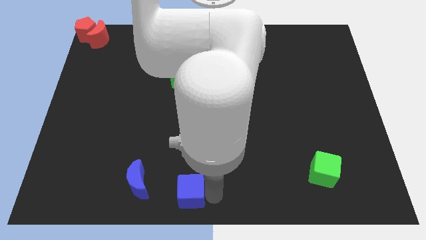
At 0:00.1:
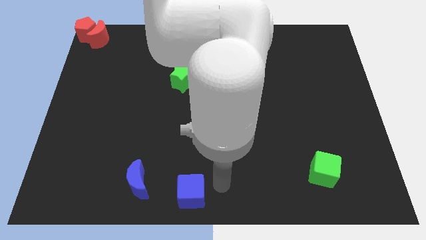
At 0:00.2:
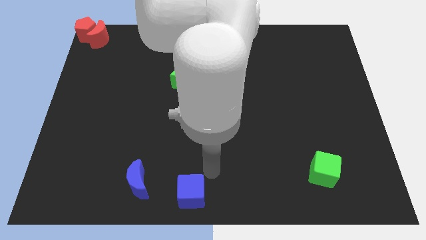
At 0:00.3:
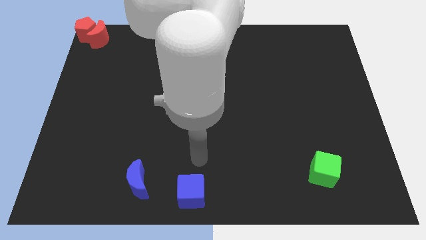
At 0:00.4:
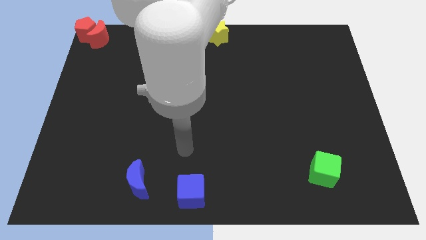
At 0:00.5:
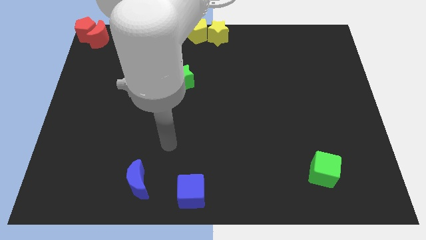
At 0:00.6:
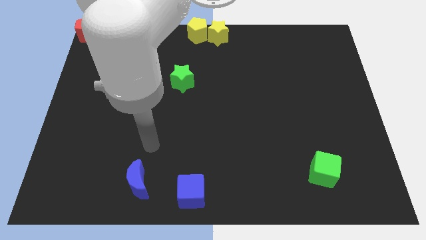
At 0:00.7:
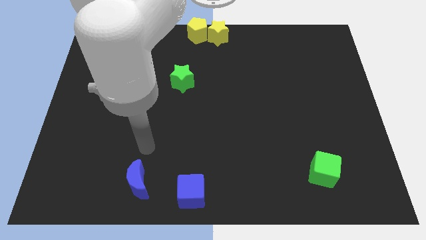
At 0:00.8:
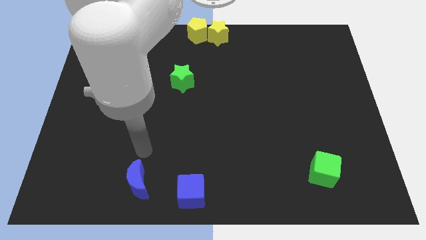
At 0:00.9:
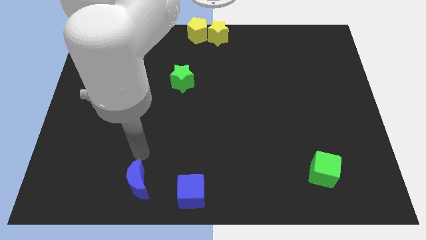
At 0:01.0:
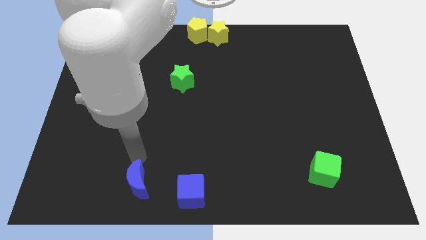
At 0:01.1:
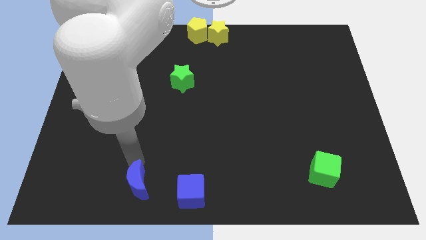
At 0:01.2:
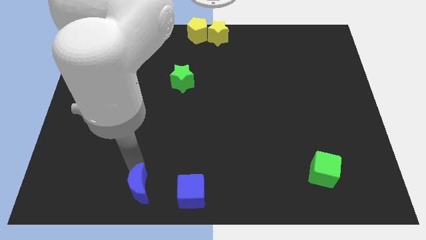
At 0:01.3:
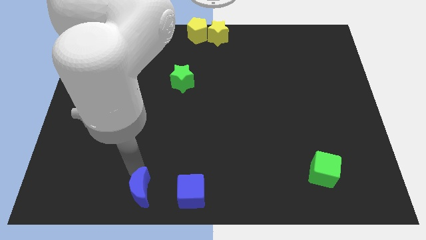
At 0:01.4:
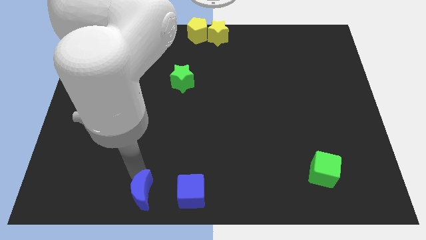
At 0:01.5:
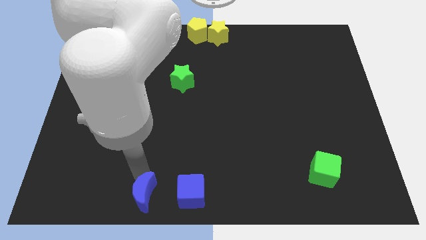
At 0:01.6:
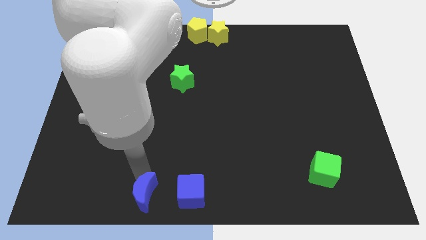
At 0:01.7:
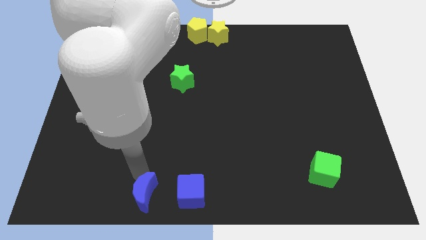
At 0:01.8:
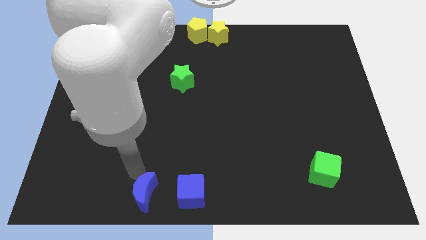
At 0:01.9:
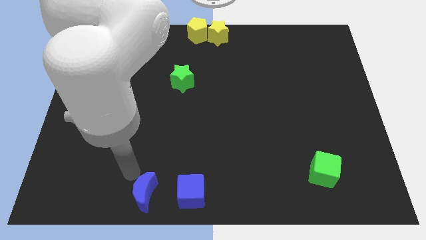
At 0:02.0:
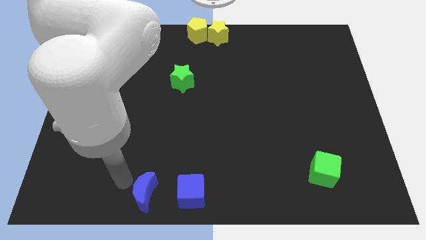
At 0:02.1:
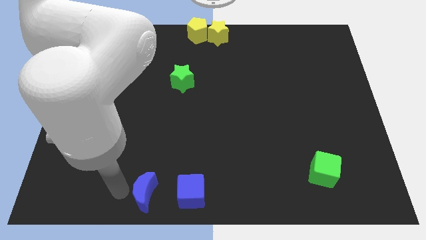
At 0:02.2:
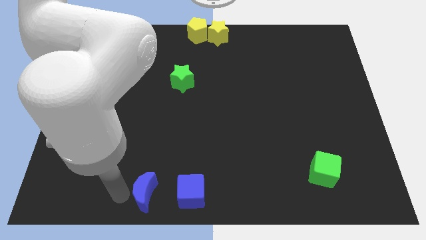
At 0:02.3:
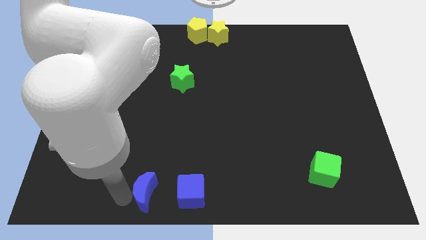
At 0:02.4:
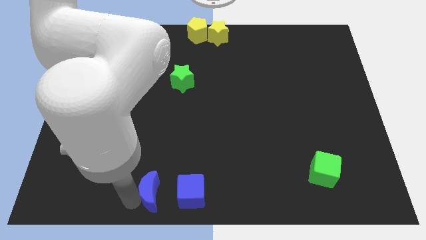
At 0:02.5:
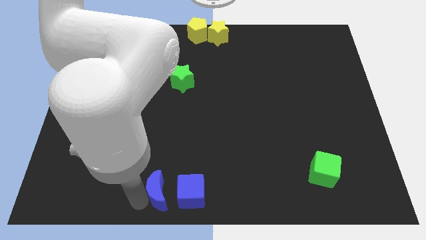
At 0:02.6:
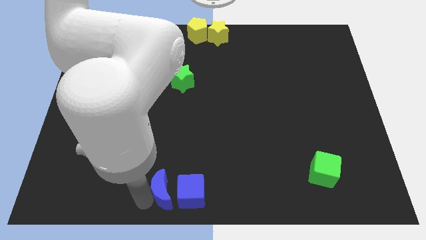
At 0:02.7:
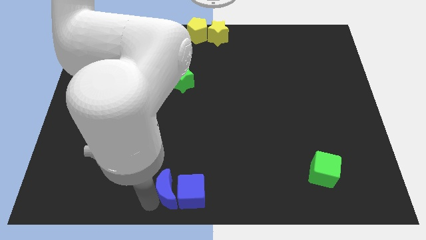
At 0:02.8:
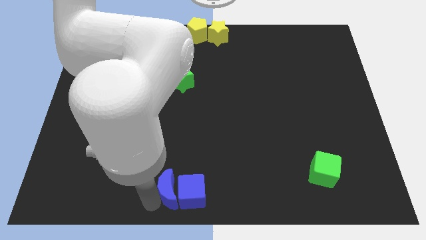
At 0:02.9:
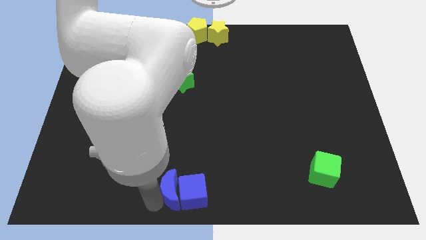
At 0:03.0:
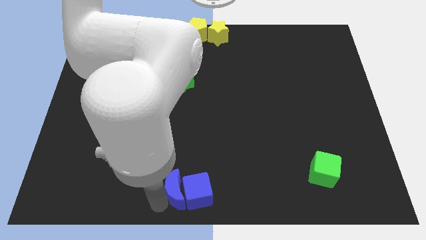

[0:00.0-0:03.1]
push the blue crescent into the left of the blue cube

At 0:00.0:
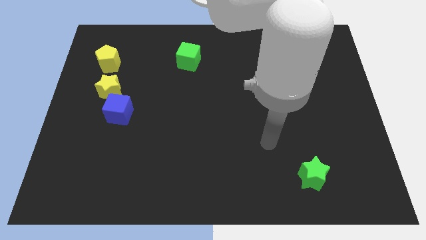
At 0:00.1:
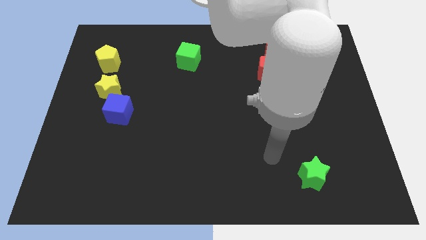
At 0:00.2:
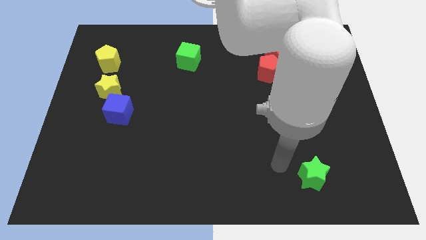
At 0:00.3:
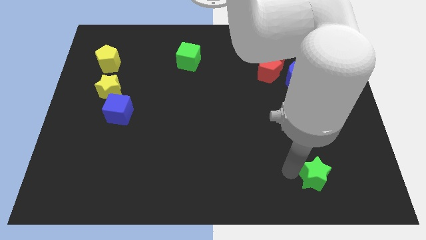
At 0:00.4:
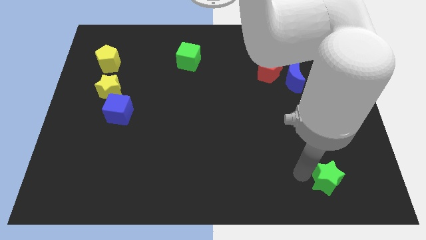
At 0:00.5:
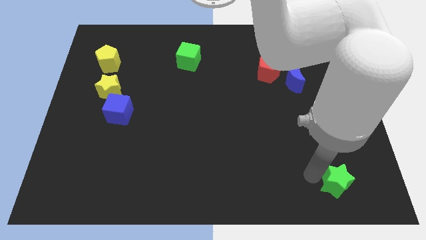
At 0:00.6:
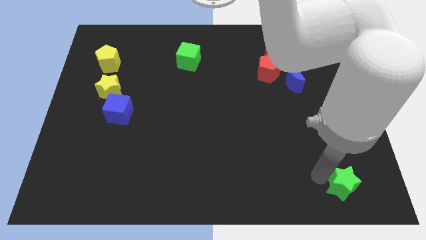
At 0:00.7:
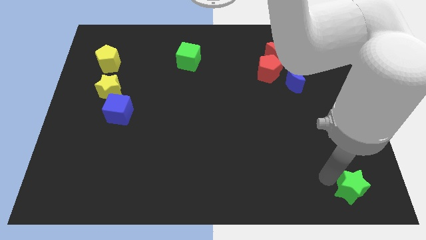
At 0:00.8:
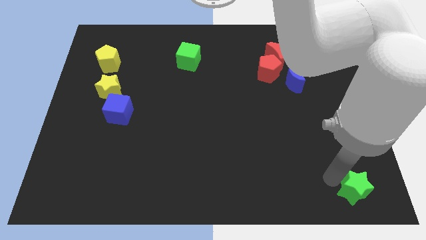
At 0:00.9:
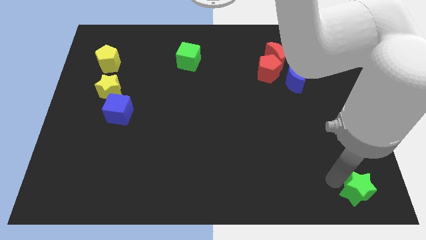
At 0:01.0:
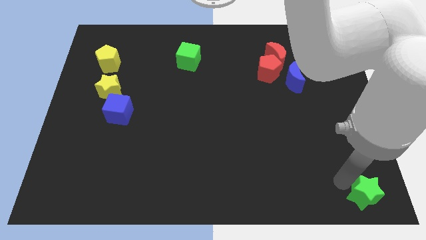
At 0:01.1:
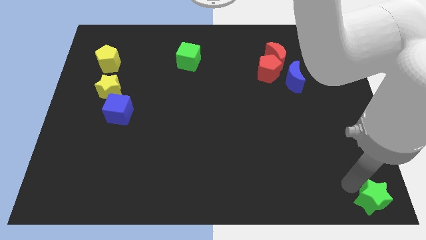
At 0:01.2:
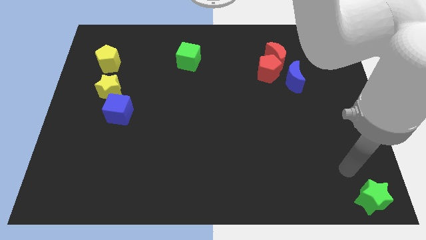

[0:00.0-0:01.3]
push green star to the bottom right corner of the board

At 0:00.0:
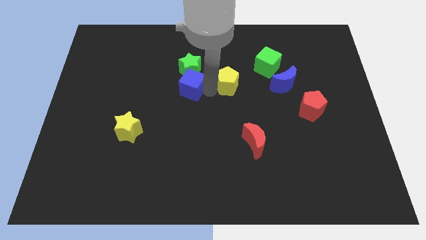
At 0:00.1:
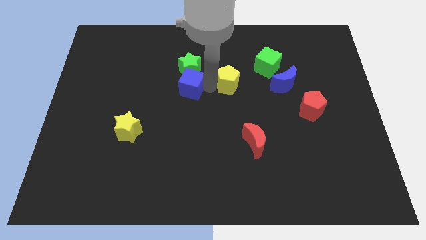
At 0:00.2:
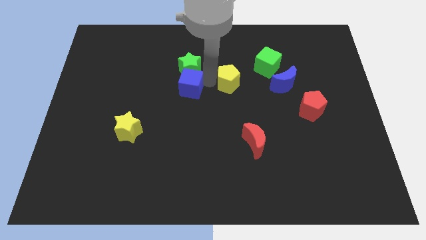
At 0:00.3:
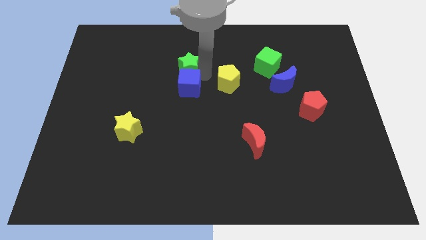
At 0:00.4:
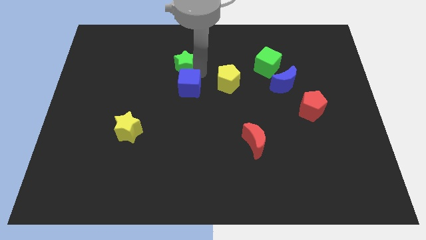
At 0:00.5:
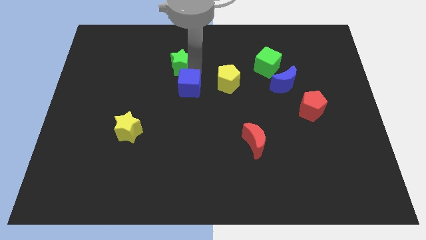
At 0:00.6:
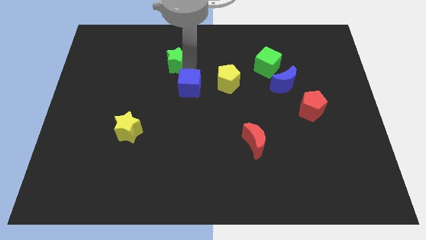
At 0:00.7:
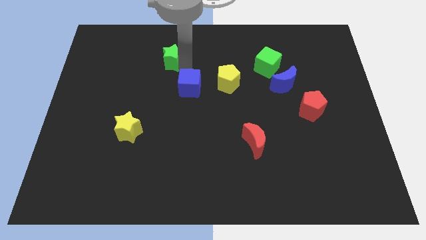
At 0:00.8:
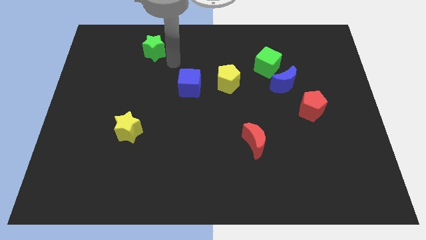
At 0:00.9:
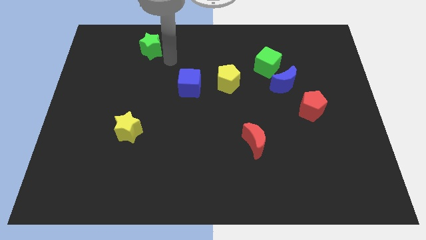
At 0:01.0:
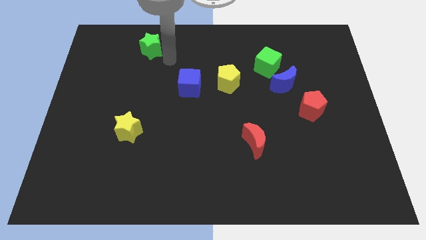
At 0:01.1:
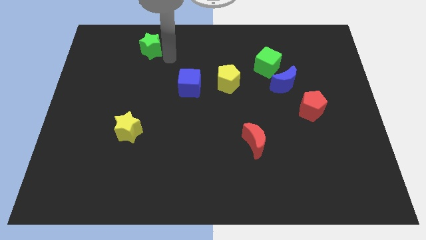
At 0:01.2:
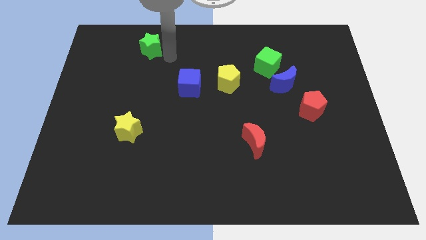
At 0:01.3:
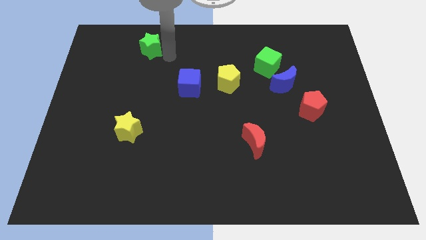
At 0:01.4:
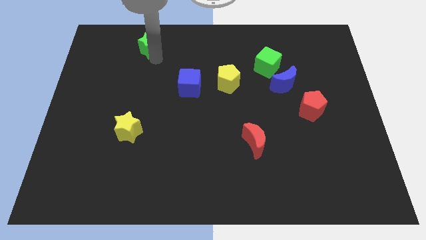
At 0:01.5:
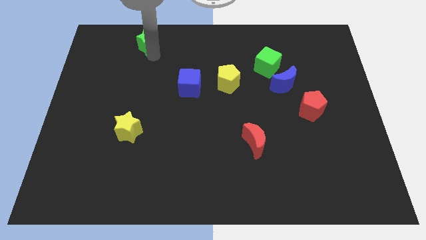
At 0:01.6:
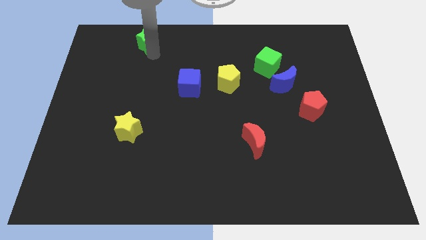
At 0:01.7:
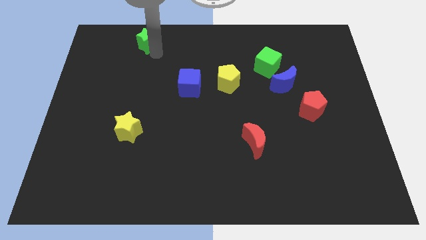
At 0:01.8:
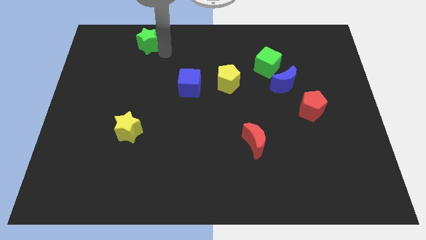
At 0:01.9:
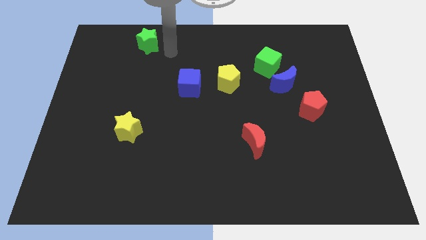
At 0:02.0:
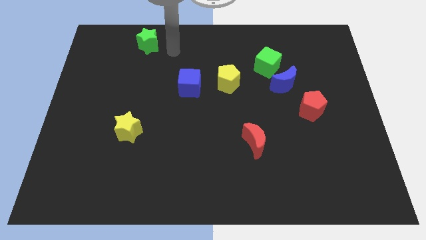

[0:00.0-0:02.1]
move the green star to the left of the board

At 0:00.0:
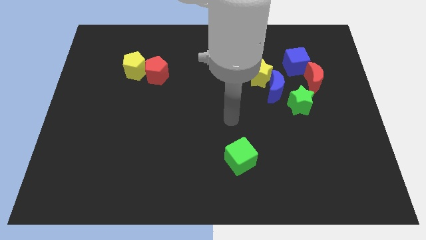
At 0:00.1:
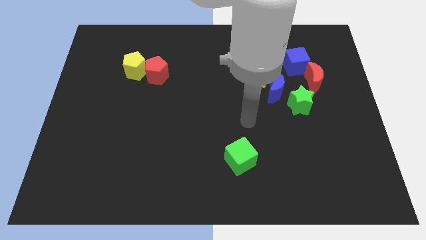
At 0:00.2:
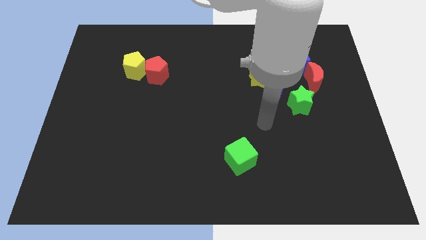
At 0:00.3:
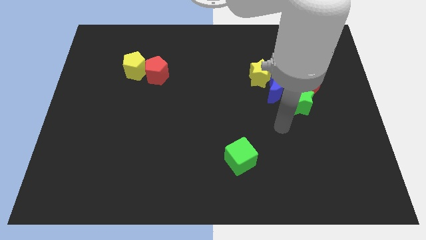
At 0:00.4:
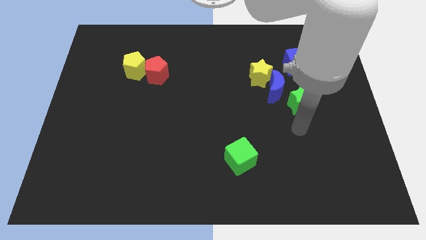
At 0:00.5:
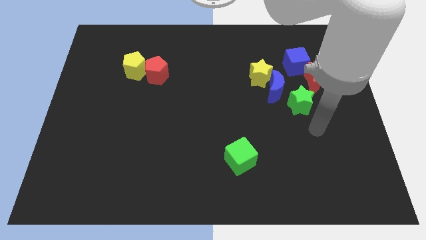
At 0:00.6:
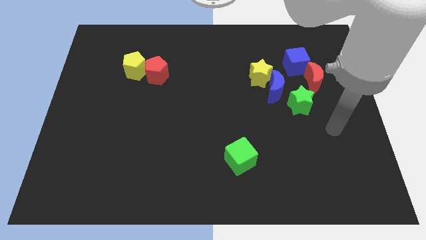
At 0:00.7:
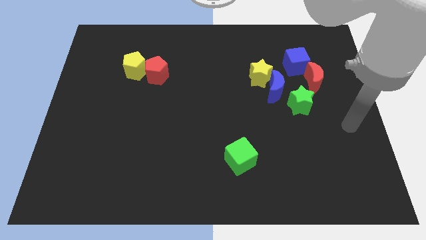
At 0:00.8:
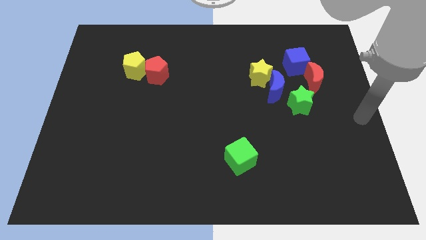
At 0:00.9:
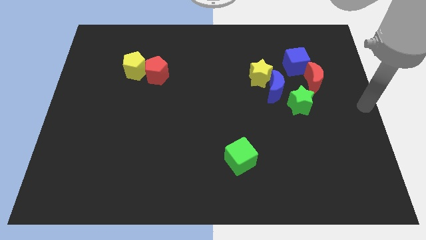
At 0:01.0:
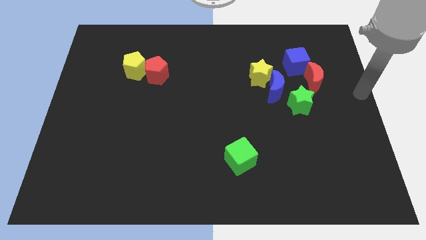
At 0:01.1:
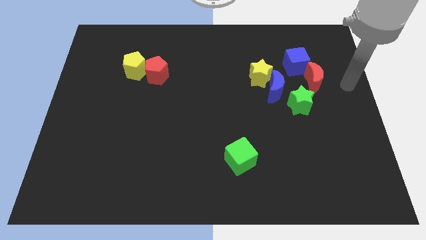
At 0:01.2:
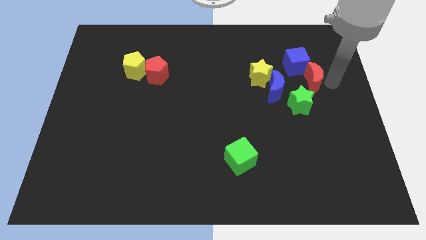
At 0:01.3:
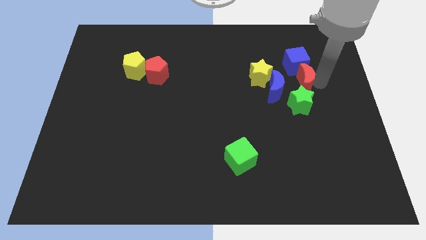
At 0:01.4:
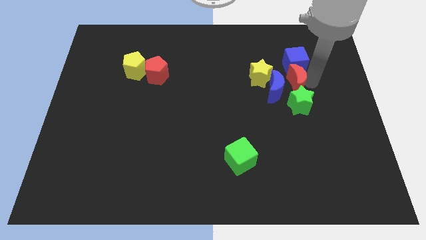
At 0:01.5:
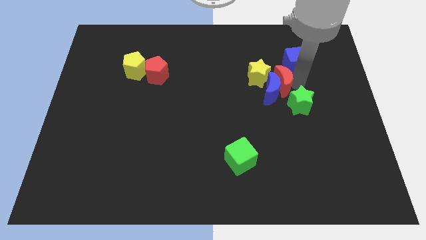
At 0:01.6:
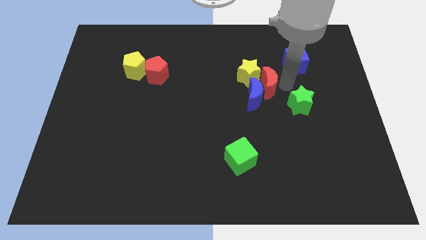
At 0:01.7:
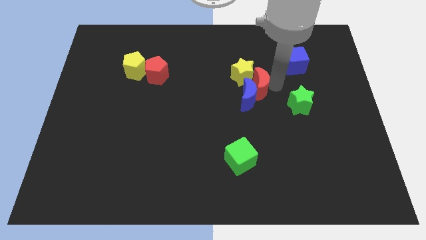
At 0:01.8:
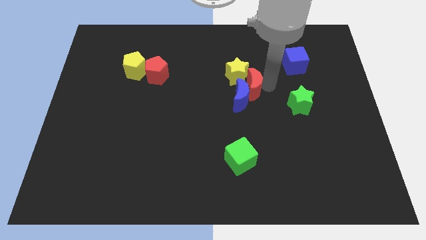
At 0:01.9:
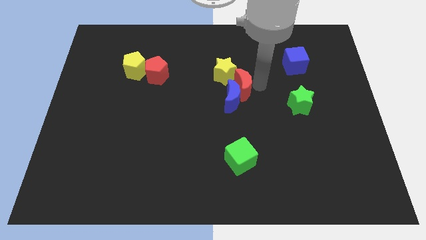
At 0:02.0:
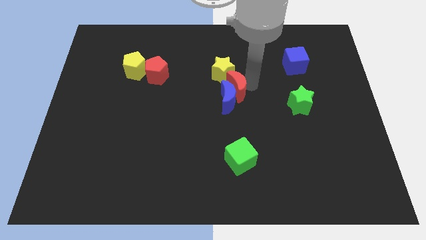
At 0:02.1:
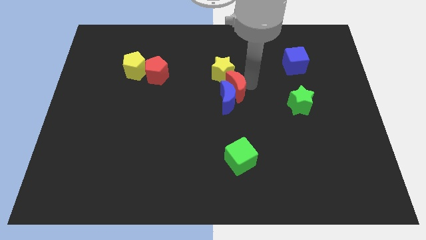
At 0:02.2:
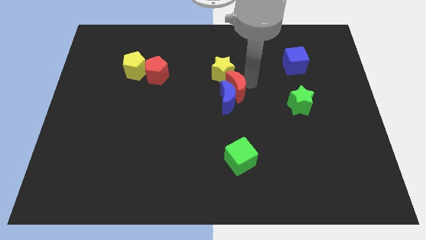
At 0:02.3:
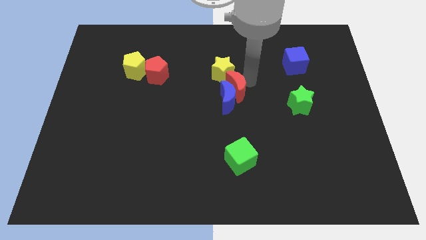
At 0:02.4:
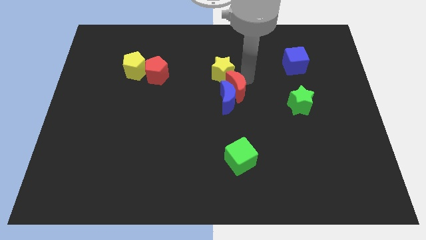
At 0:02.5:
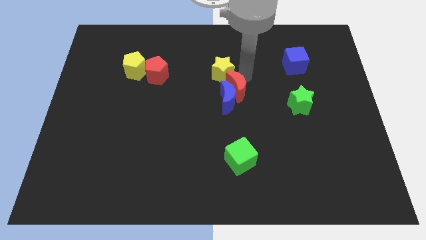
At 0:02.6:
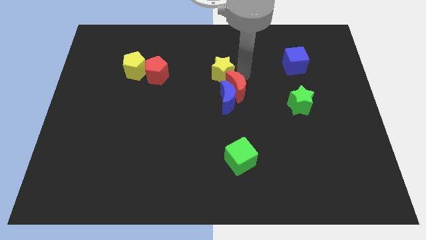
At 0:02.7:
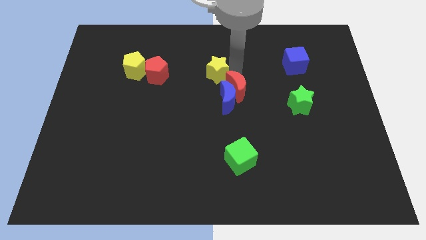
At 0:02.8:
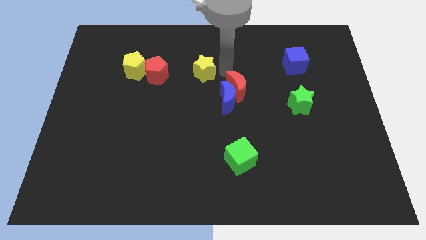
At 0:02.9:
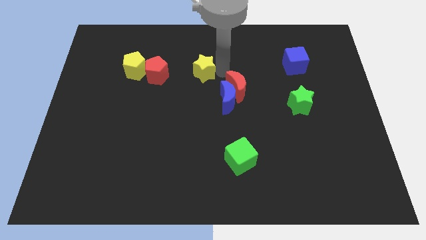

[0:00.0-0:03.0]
place the yellow star diagonal to the blue moon
